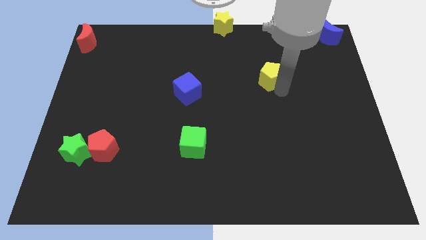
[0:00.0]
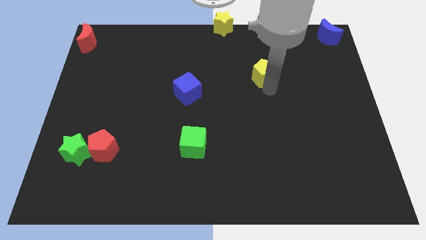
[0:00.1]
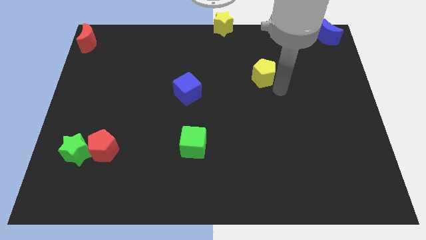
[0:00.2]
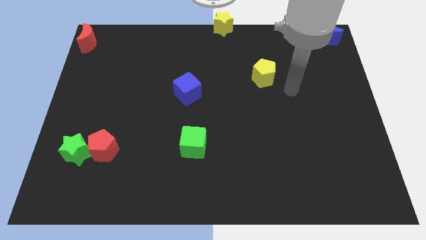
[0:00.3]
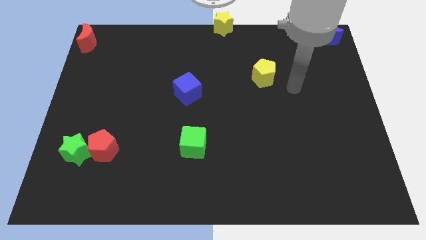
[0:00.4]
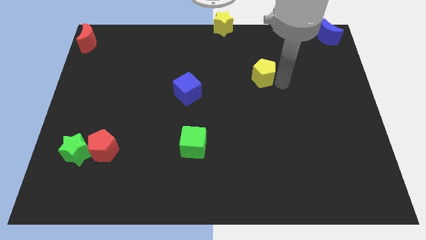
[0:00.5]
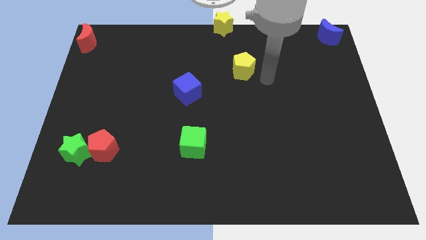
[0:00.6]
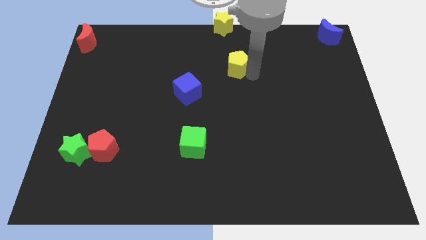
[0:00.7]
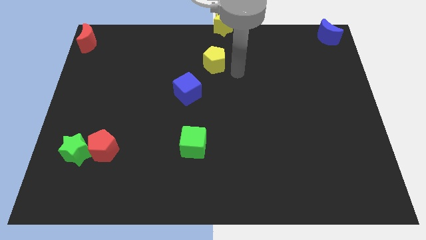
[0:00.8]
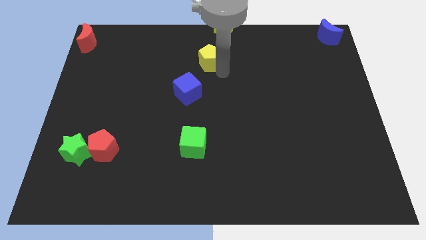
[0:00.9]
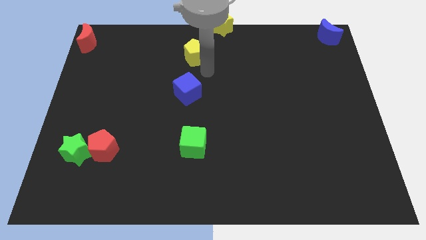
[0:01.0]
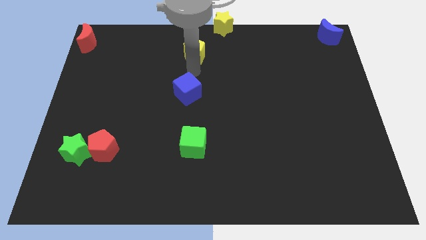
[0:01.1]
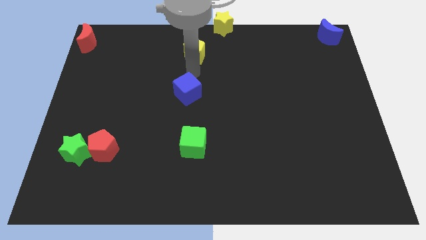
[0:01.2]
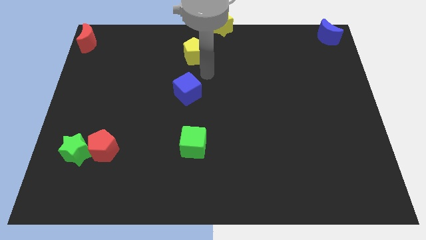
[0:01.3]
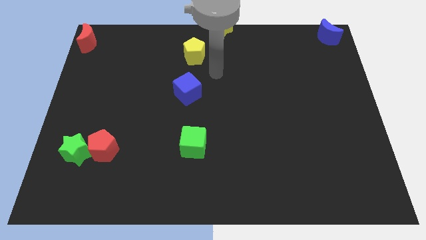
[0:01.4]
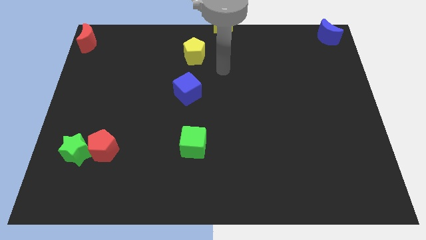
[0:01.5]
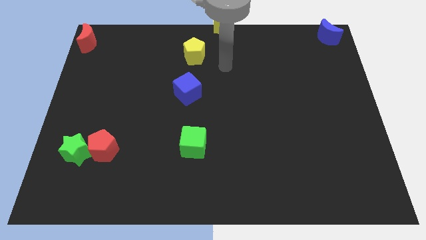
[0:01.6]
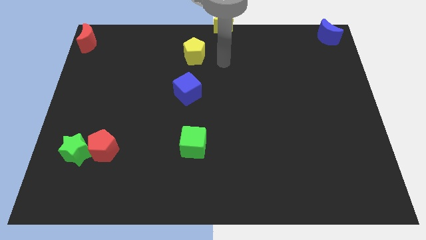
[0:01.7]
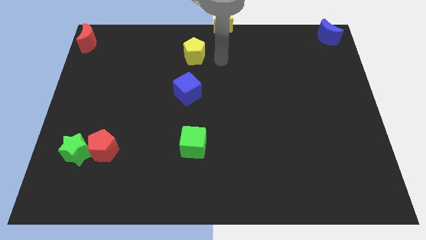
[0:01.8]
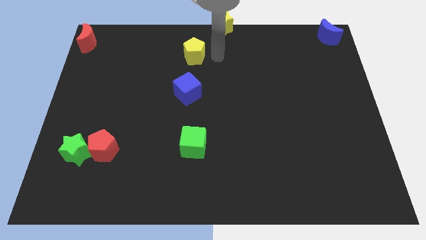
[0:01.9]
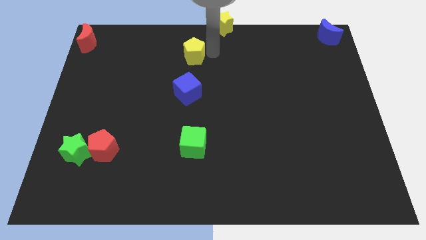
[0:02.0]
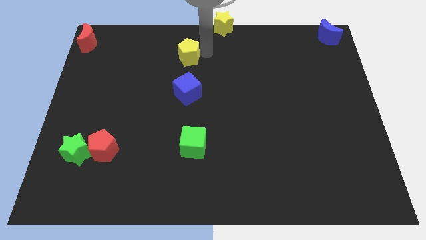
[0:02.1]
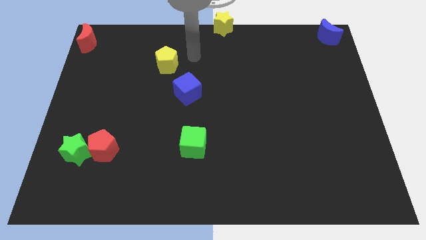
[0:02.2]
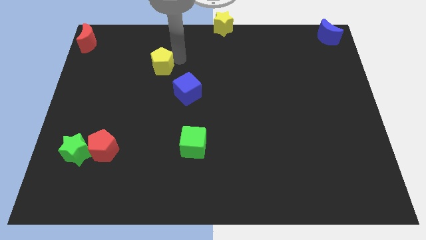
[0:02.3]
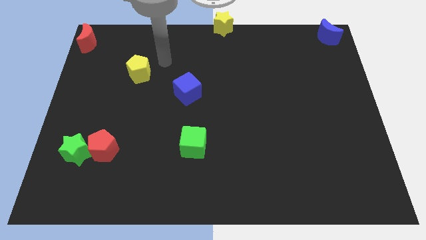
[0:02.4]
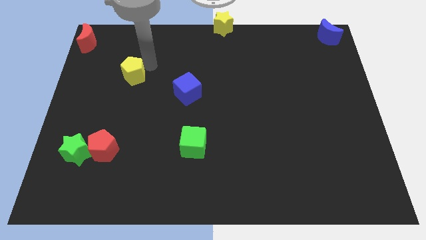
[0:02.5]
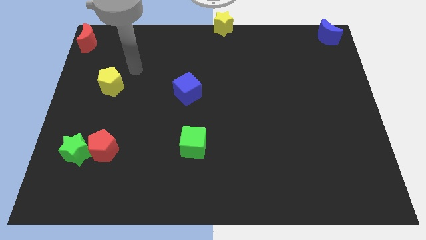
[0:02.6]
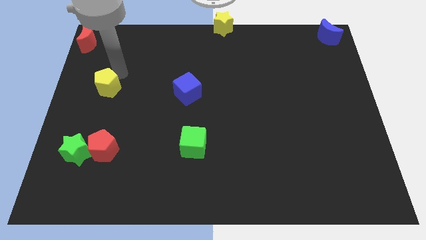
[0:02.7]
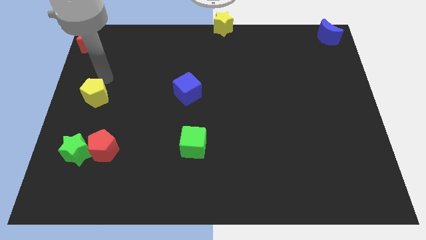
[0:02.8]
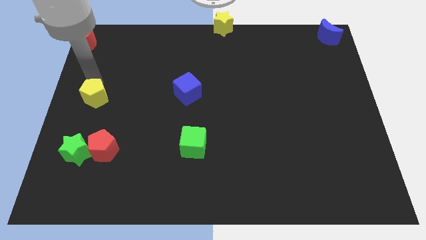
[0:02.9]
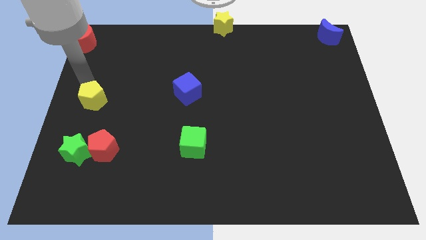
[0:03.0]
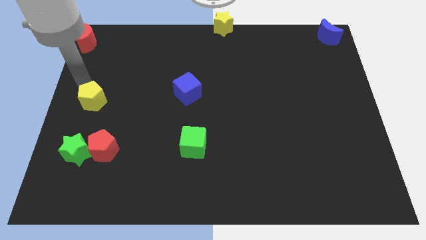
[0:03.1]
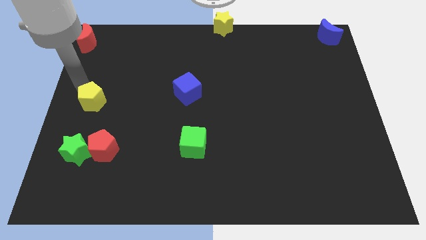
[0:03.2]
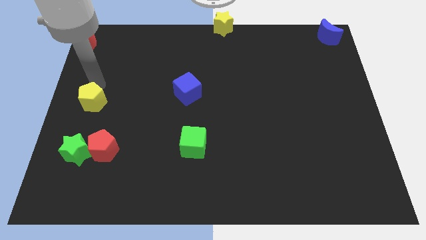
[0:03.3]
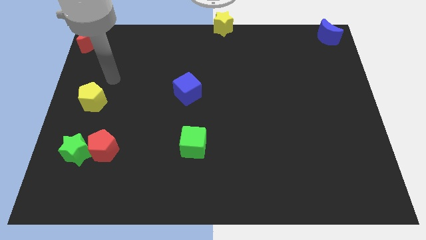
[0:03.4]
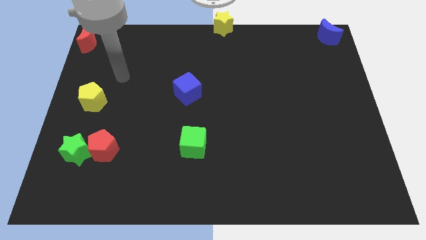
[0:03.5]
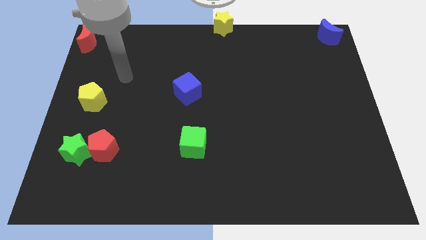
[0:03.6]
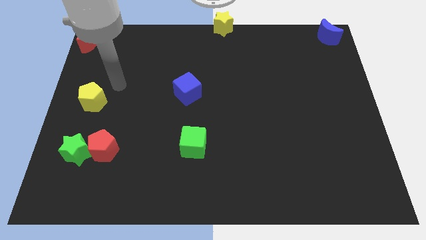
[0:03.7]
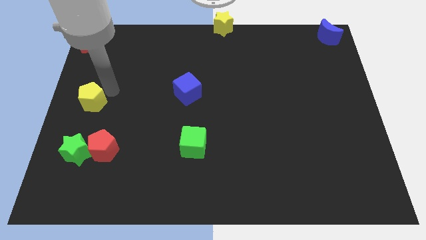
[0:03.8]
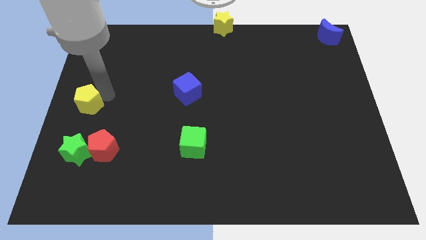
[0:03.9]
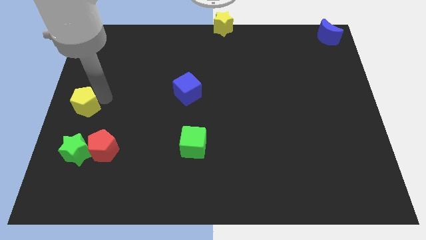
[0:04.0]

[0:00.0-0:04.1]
place the yellow pentagon above the red moon

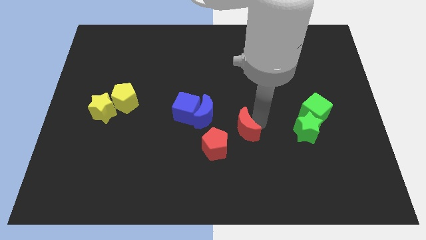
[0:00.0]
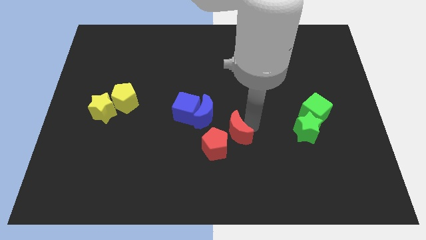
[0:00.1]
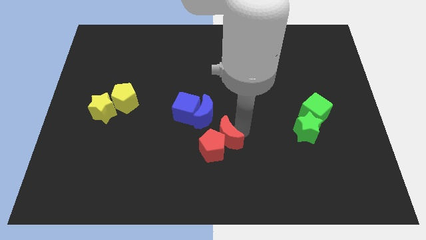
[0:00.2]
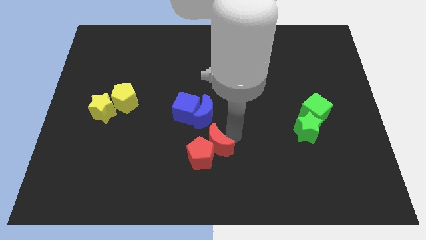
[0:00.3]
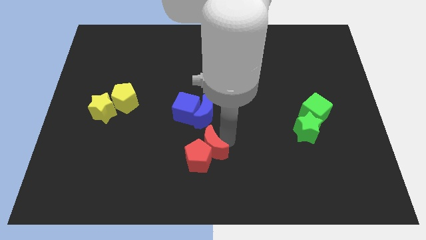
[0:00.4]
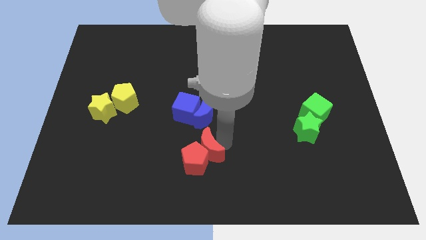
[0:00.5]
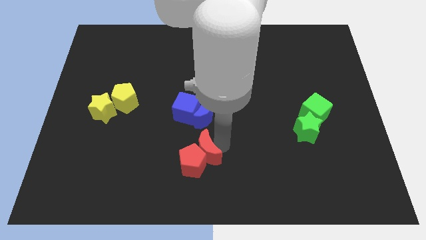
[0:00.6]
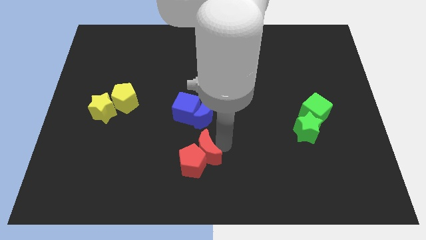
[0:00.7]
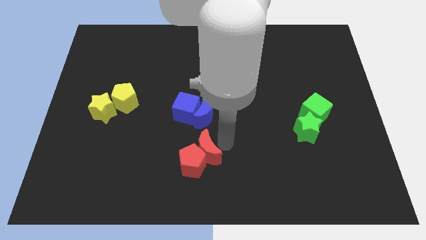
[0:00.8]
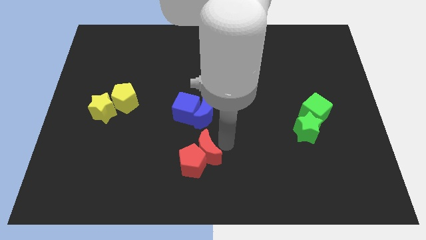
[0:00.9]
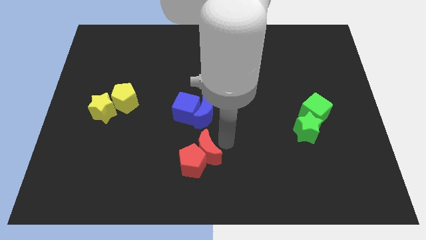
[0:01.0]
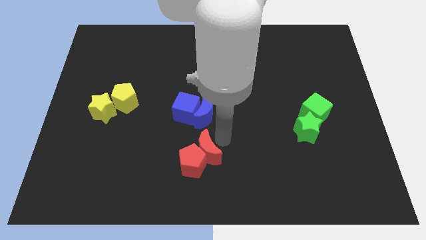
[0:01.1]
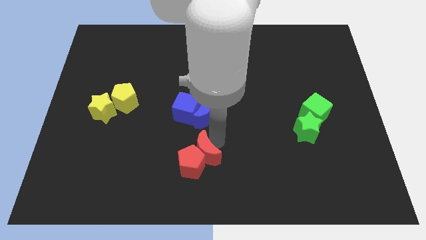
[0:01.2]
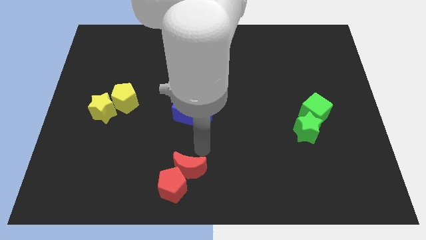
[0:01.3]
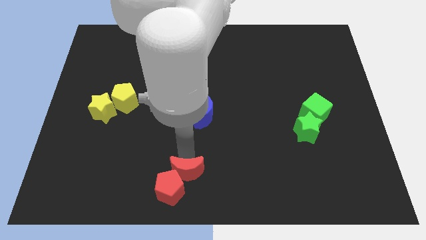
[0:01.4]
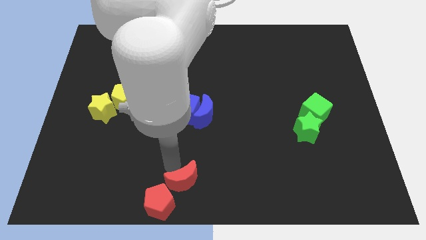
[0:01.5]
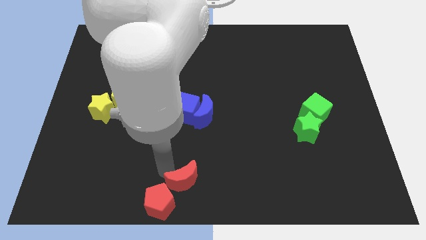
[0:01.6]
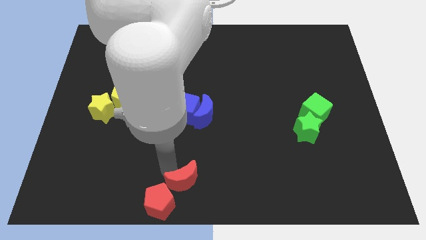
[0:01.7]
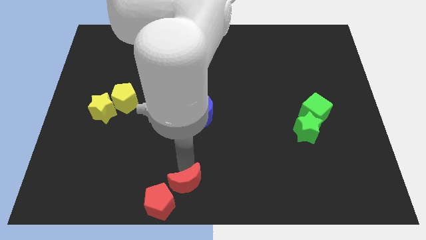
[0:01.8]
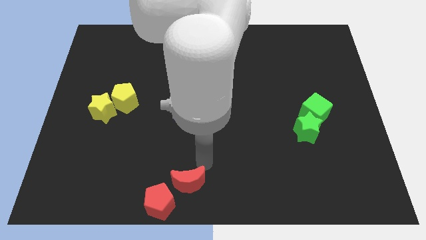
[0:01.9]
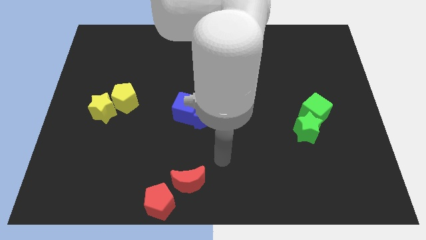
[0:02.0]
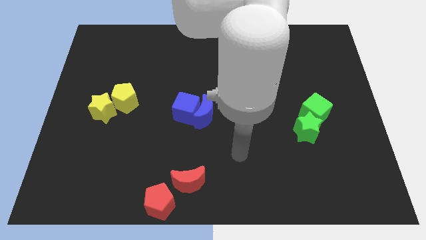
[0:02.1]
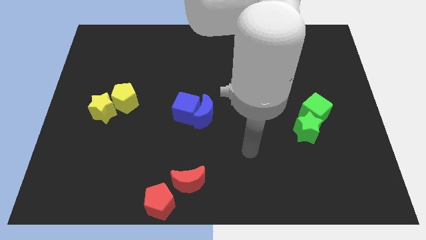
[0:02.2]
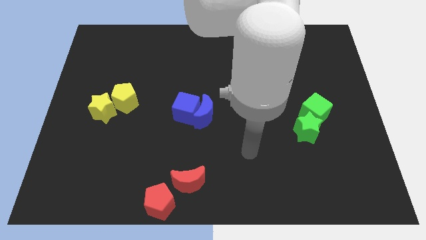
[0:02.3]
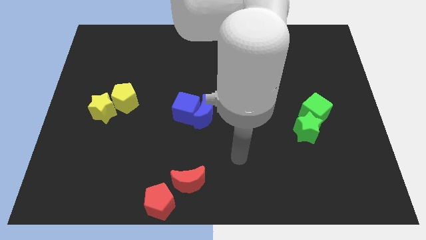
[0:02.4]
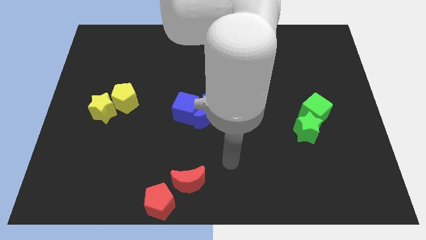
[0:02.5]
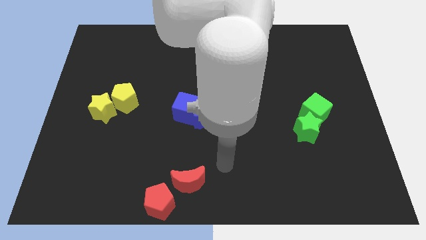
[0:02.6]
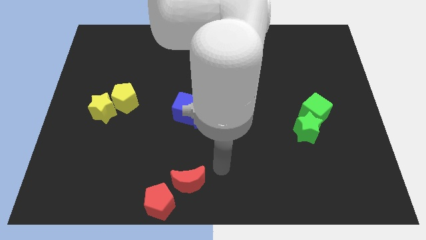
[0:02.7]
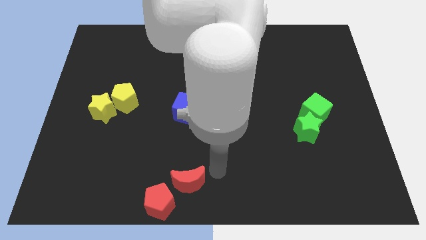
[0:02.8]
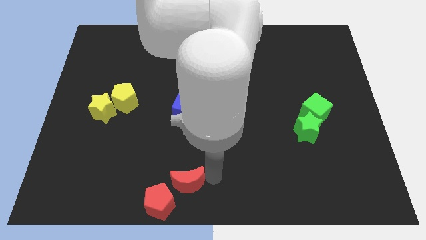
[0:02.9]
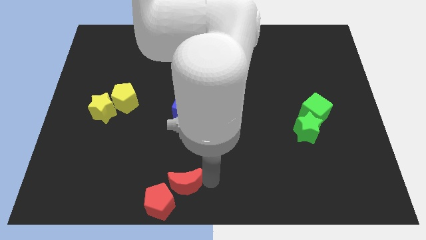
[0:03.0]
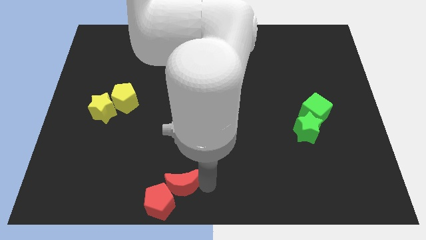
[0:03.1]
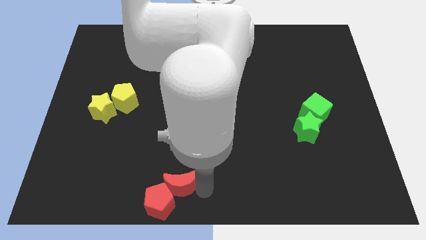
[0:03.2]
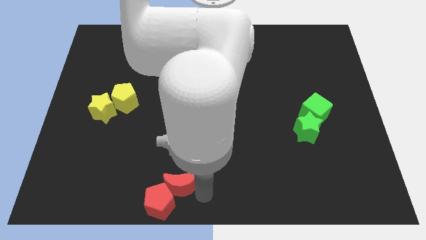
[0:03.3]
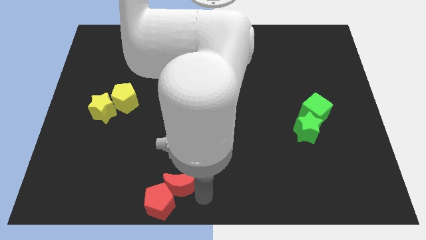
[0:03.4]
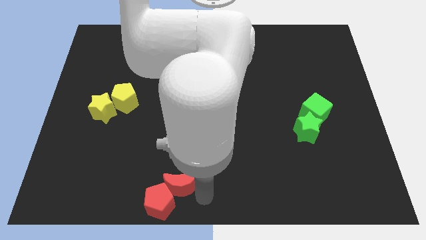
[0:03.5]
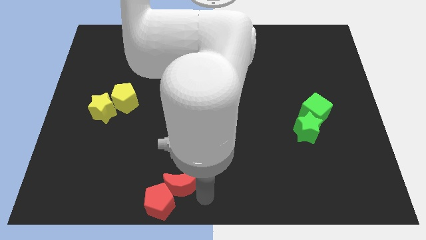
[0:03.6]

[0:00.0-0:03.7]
move the red blocks diagonally to the bottom of the board

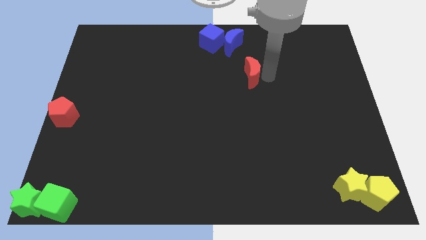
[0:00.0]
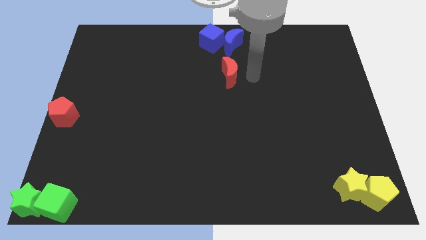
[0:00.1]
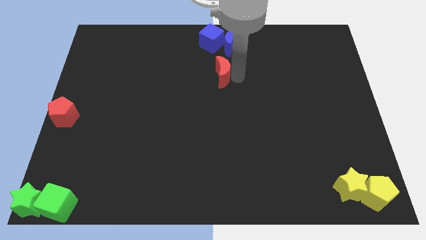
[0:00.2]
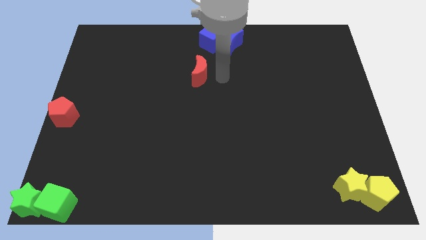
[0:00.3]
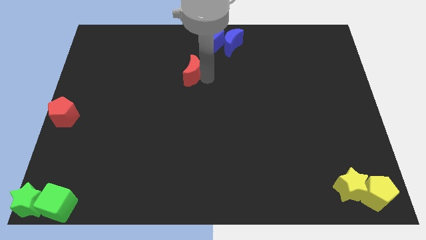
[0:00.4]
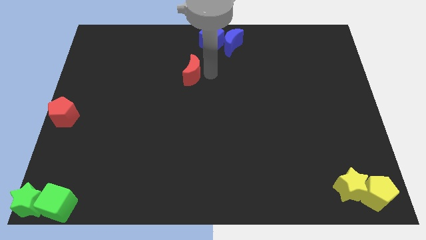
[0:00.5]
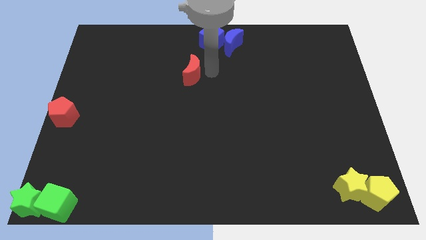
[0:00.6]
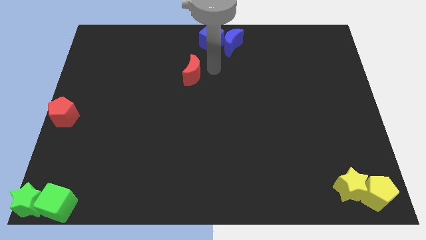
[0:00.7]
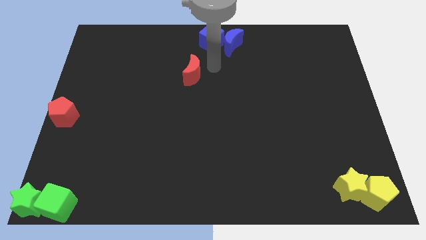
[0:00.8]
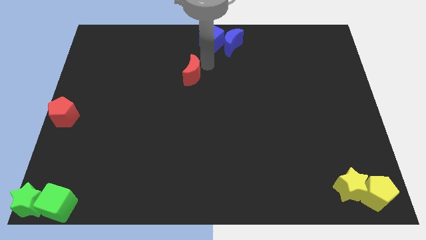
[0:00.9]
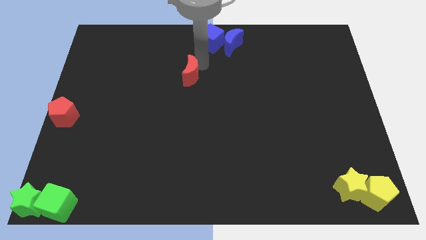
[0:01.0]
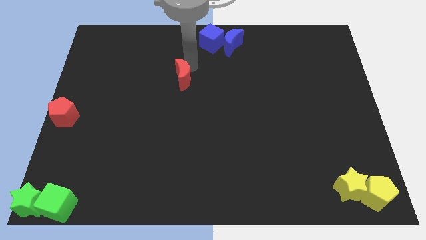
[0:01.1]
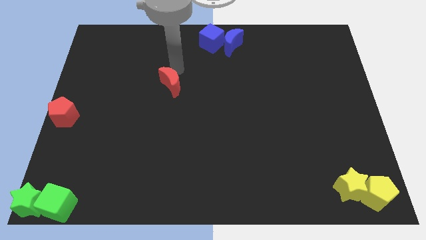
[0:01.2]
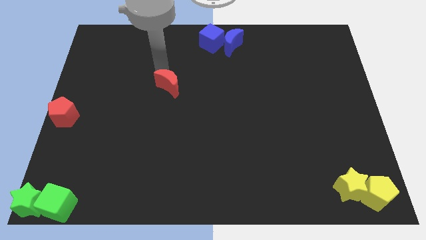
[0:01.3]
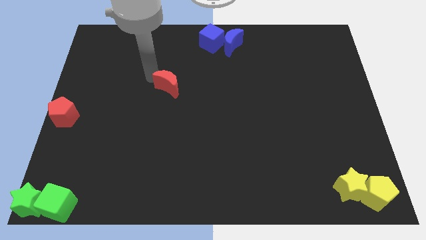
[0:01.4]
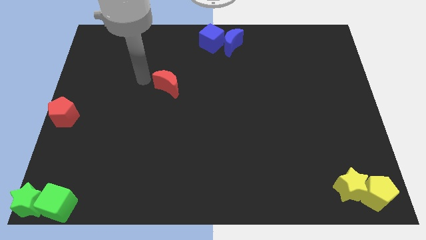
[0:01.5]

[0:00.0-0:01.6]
move the red moon diagonally bottom left to the blue cube
